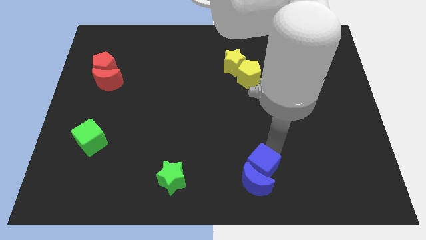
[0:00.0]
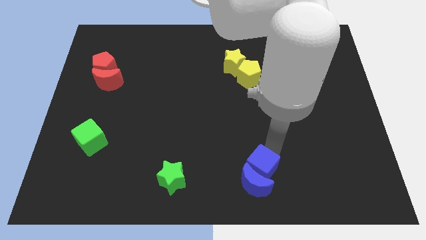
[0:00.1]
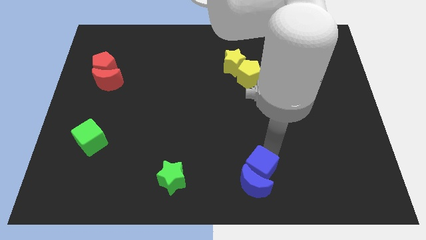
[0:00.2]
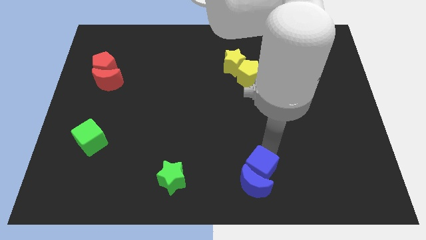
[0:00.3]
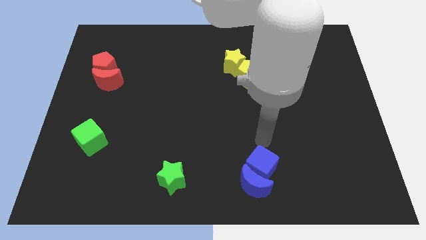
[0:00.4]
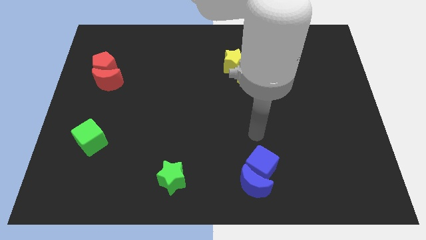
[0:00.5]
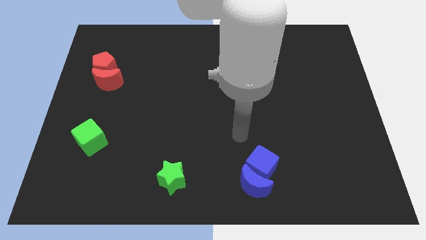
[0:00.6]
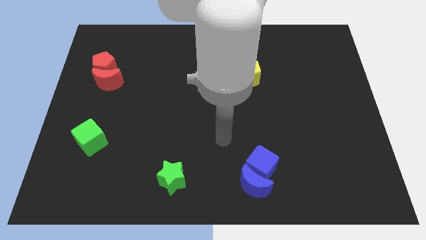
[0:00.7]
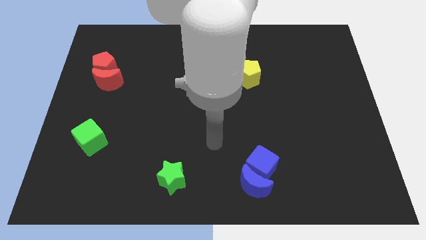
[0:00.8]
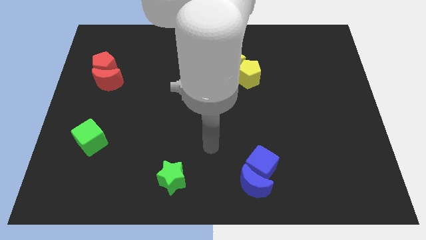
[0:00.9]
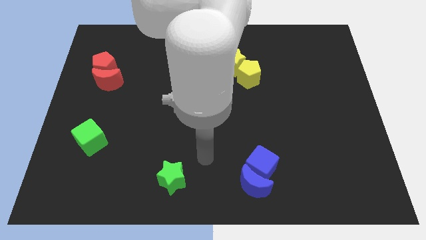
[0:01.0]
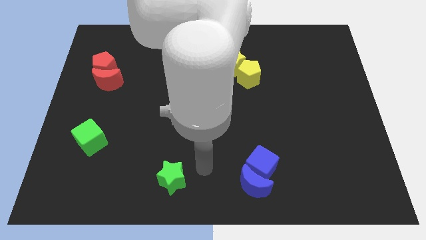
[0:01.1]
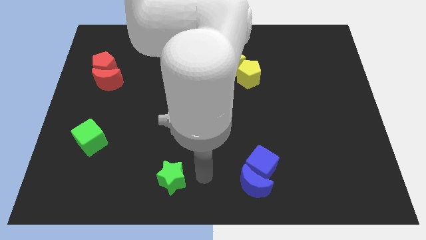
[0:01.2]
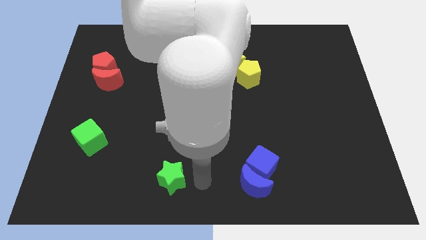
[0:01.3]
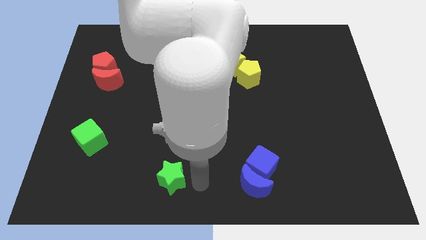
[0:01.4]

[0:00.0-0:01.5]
move your arm to the right of the green star

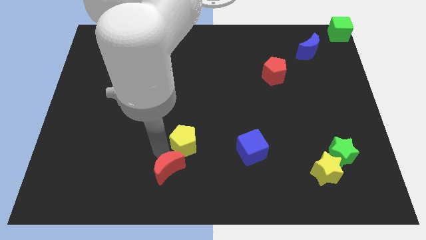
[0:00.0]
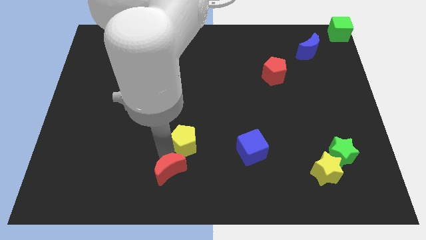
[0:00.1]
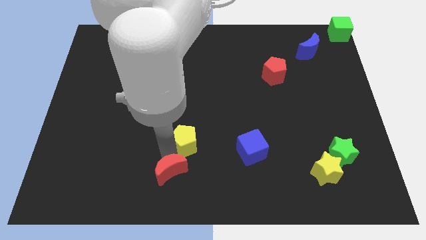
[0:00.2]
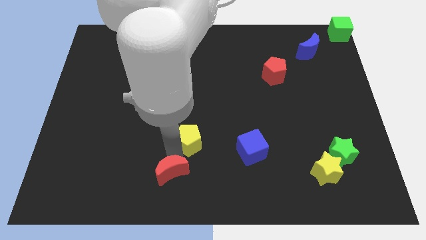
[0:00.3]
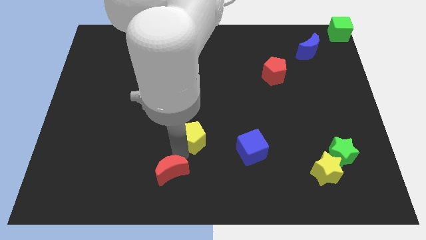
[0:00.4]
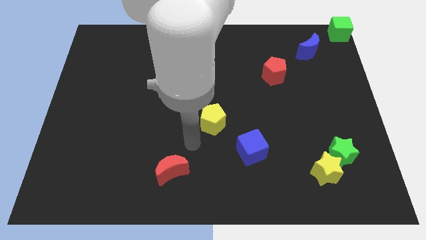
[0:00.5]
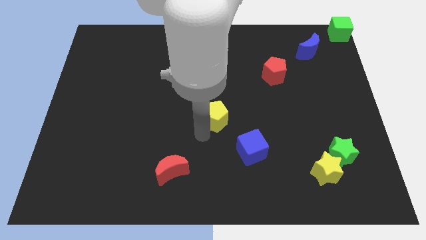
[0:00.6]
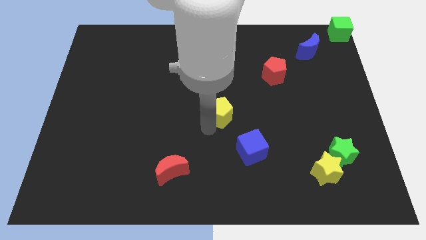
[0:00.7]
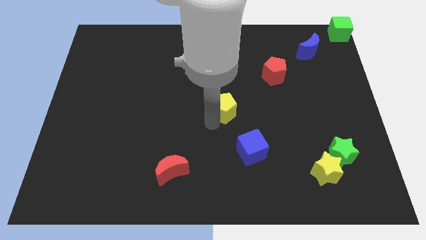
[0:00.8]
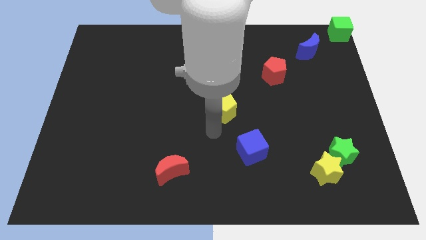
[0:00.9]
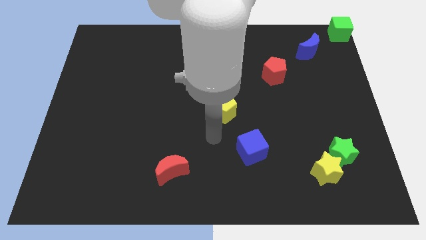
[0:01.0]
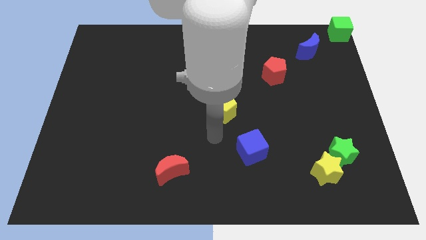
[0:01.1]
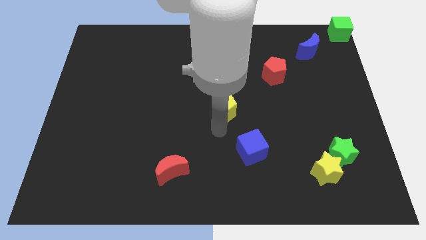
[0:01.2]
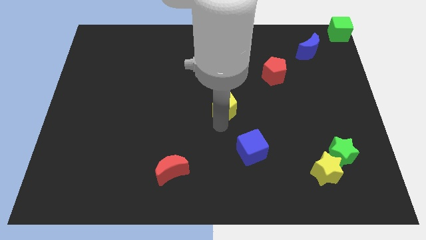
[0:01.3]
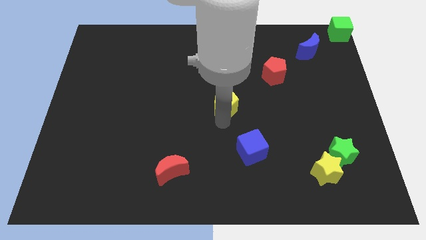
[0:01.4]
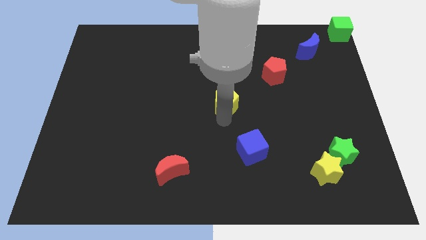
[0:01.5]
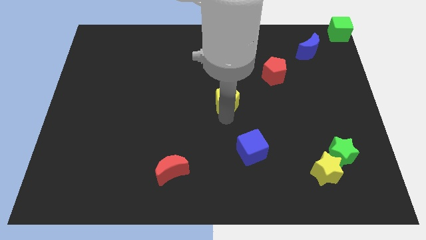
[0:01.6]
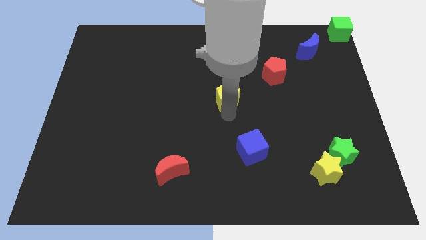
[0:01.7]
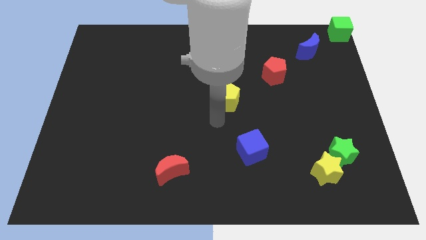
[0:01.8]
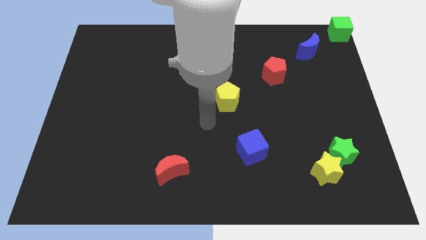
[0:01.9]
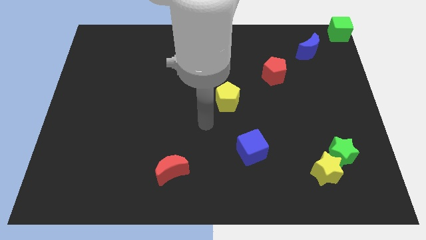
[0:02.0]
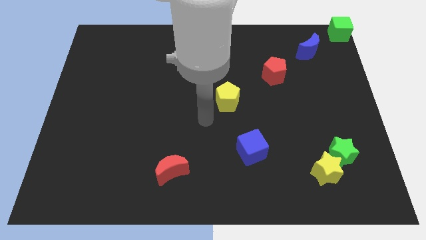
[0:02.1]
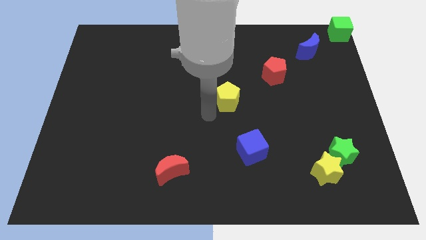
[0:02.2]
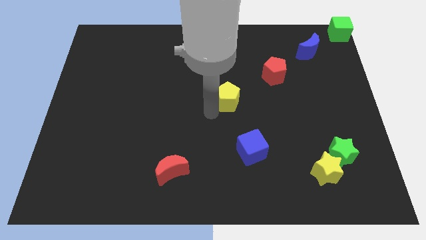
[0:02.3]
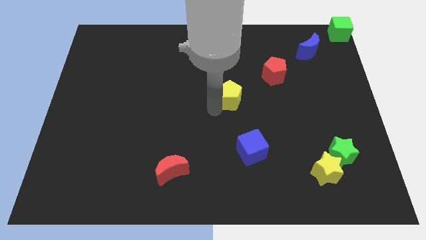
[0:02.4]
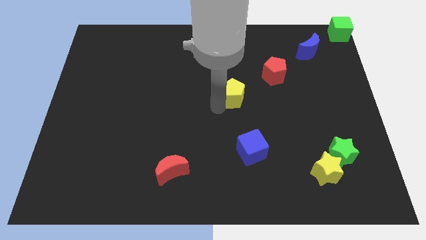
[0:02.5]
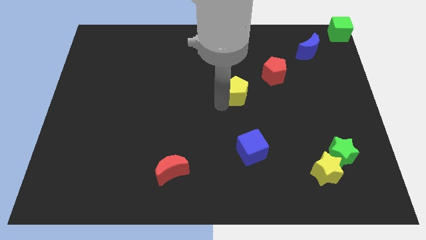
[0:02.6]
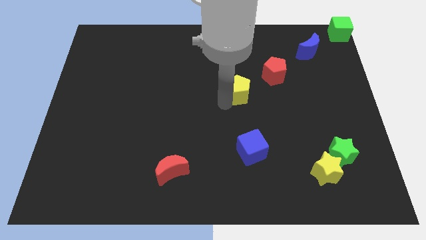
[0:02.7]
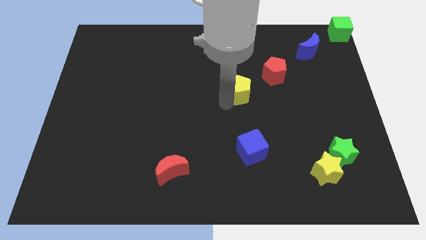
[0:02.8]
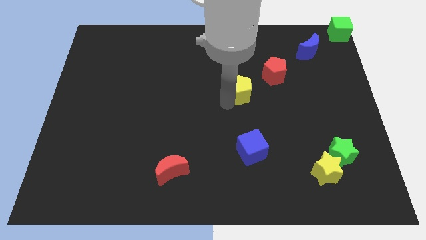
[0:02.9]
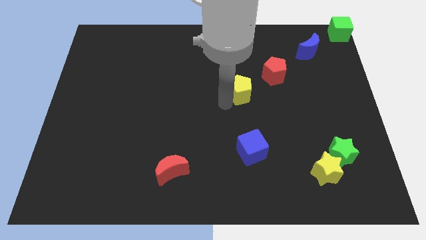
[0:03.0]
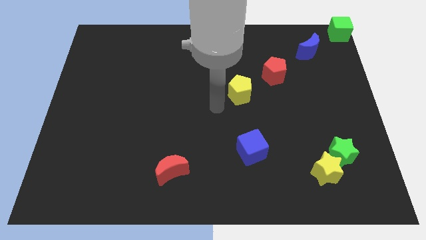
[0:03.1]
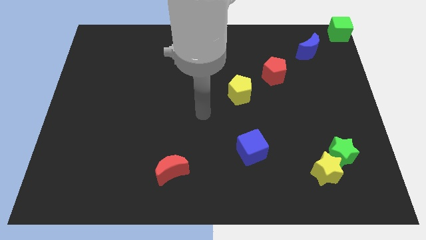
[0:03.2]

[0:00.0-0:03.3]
place the yellow pentagon above the blue cube

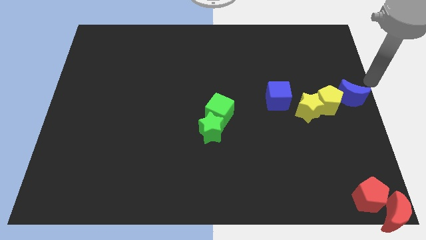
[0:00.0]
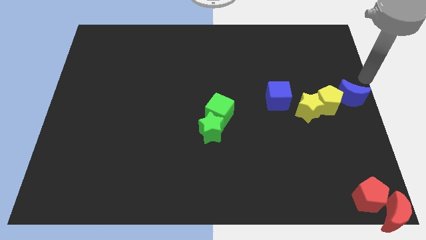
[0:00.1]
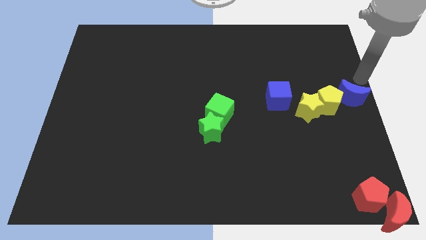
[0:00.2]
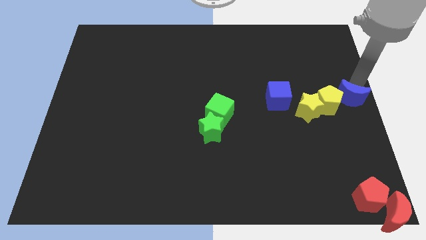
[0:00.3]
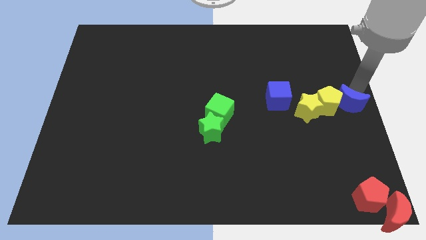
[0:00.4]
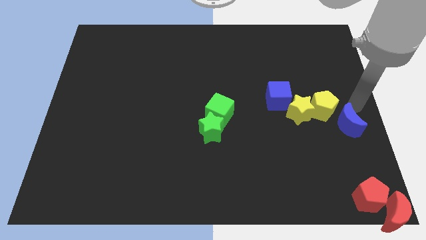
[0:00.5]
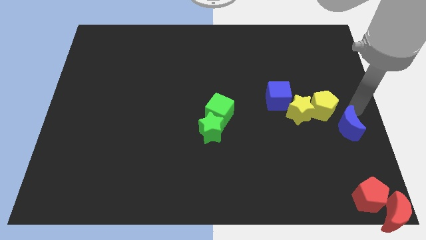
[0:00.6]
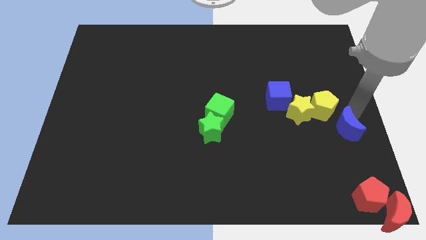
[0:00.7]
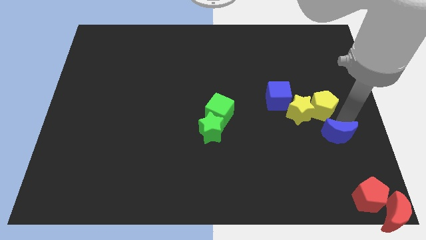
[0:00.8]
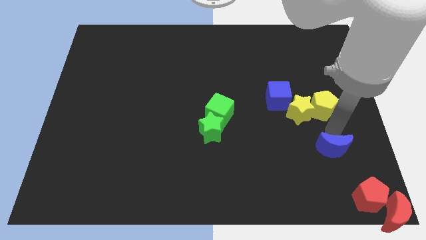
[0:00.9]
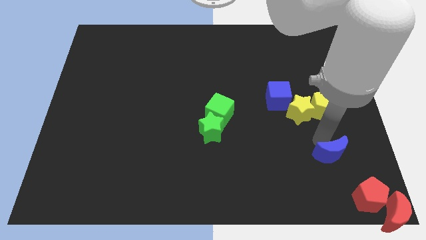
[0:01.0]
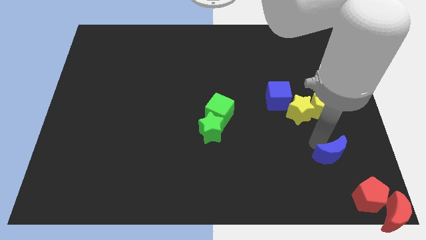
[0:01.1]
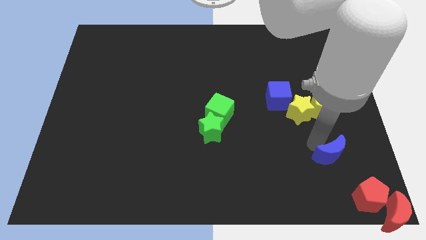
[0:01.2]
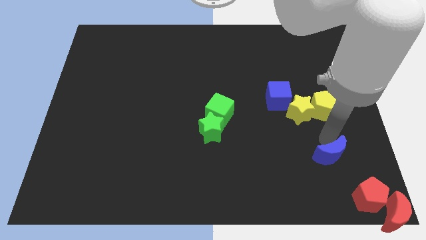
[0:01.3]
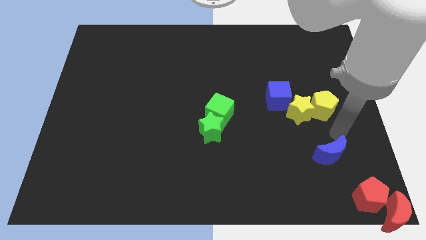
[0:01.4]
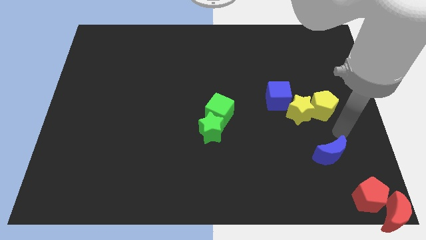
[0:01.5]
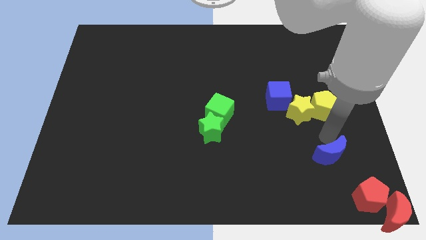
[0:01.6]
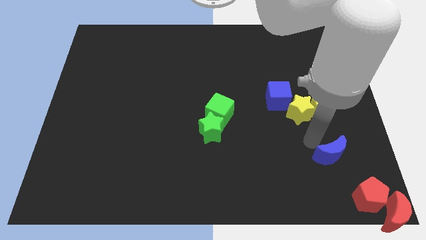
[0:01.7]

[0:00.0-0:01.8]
move the blue crescent to the bottom of the board

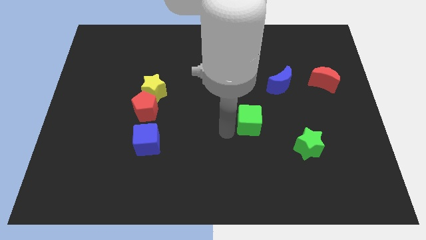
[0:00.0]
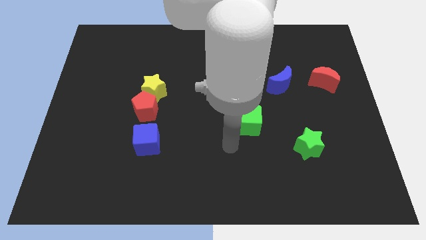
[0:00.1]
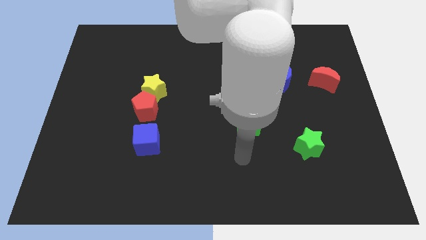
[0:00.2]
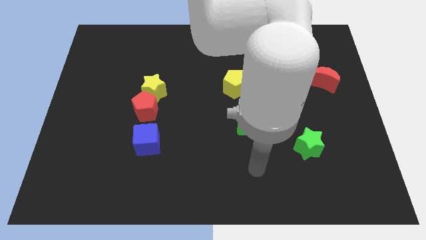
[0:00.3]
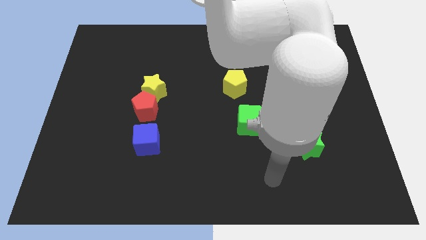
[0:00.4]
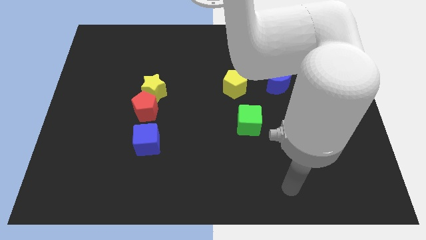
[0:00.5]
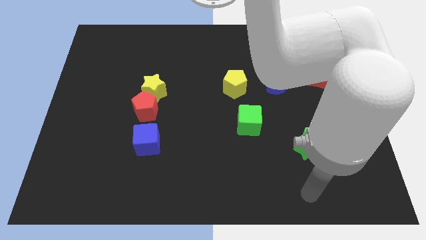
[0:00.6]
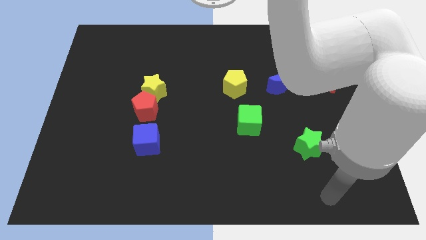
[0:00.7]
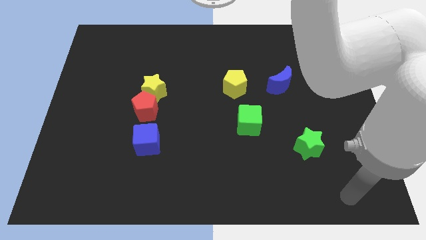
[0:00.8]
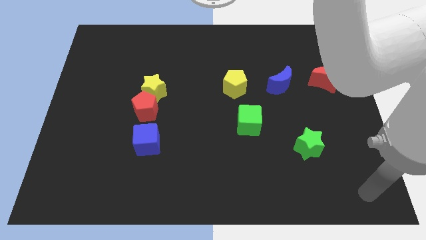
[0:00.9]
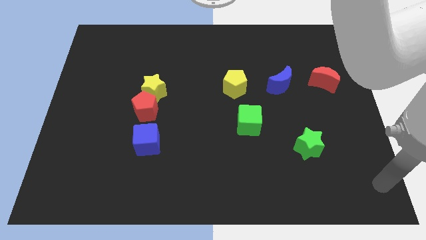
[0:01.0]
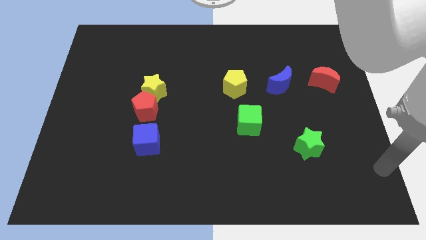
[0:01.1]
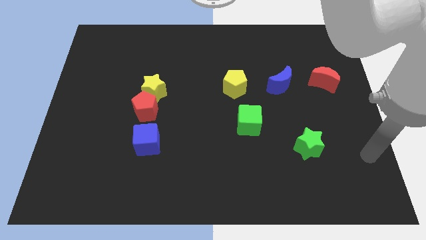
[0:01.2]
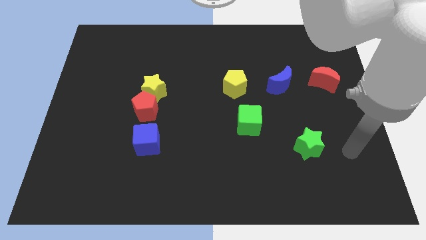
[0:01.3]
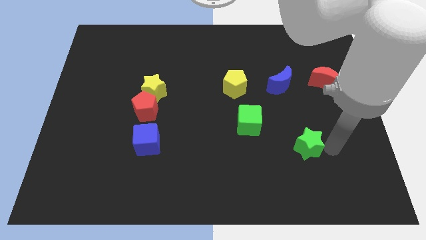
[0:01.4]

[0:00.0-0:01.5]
move your arm to the right side of the green star

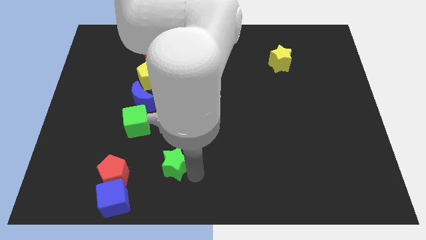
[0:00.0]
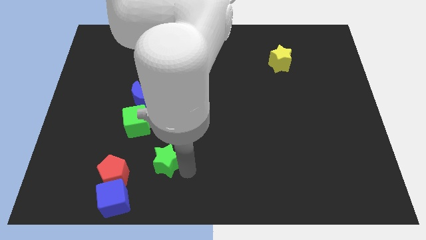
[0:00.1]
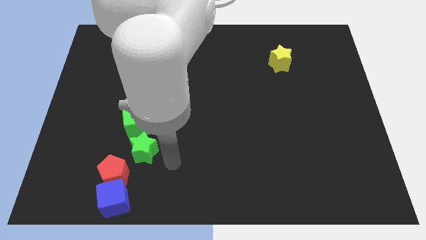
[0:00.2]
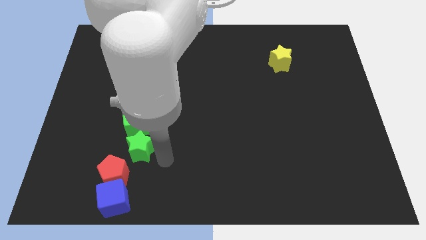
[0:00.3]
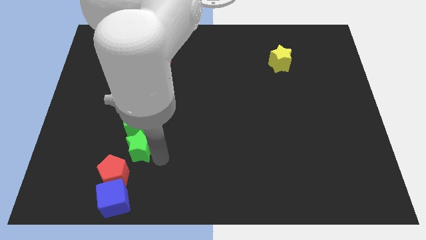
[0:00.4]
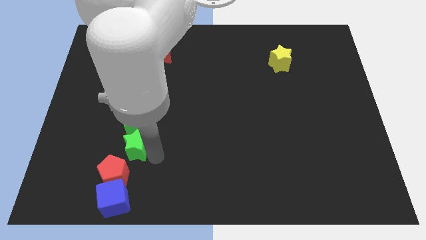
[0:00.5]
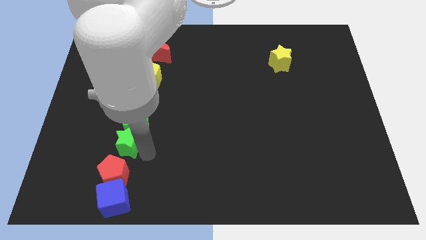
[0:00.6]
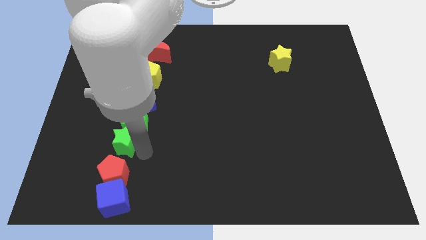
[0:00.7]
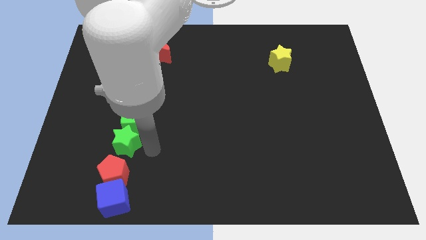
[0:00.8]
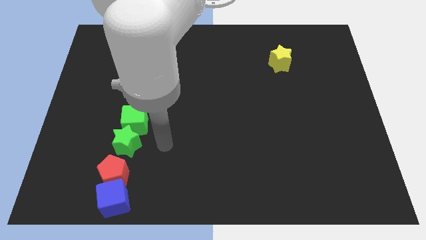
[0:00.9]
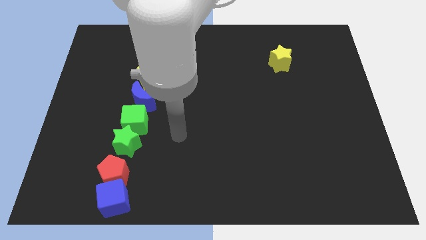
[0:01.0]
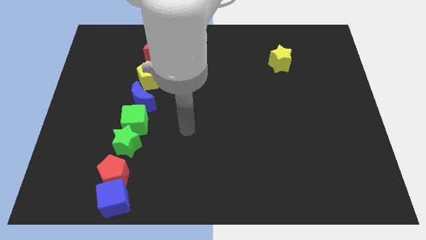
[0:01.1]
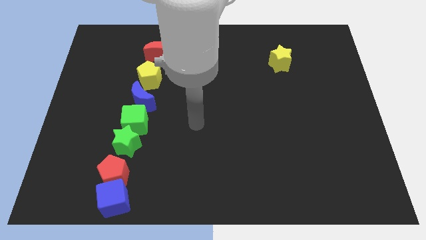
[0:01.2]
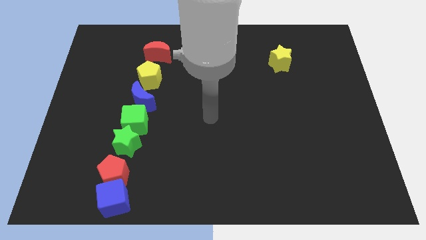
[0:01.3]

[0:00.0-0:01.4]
move the green star to the bottom of the green cube
